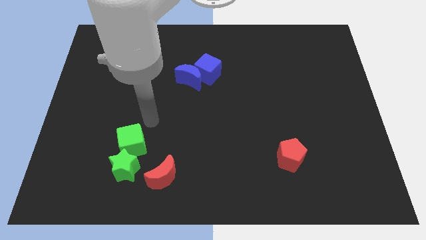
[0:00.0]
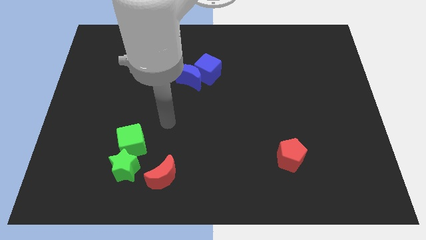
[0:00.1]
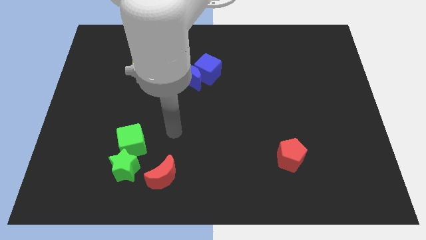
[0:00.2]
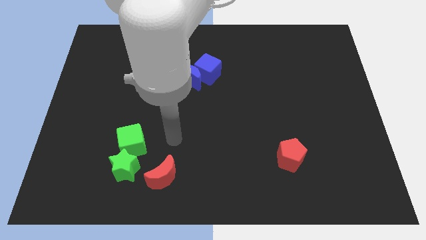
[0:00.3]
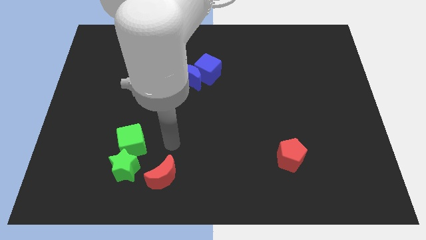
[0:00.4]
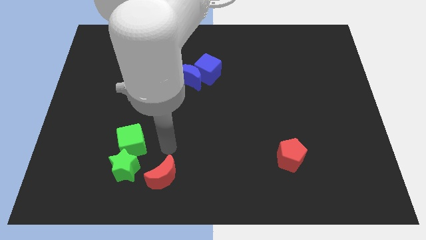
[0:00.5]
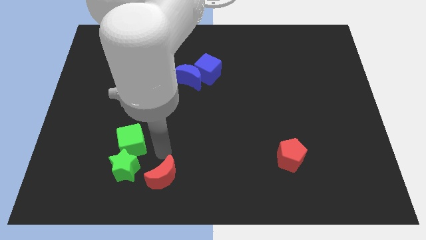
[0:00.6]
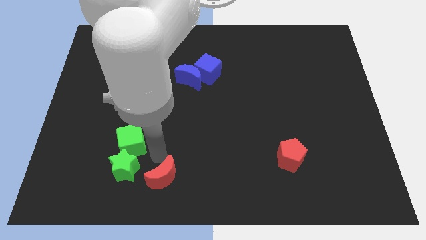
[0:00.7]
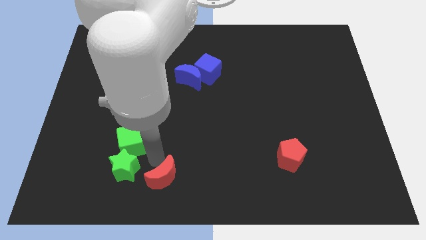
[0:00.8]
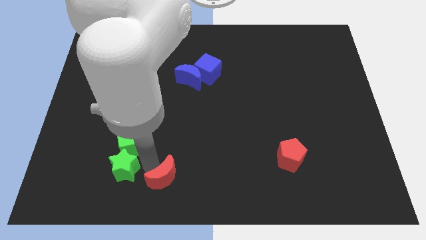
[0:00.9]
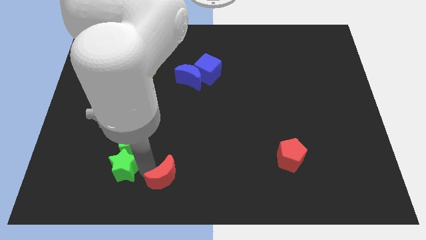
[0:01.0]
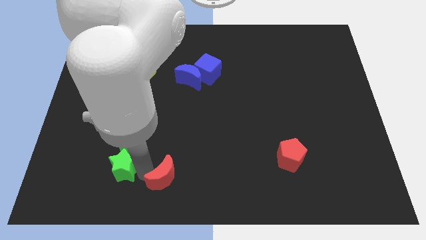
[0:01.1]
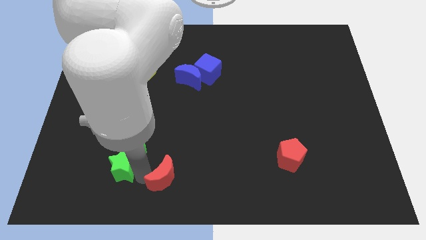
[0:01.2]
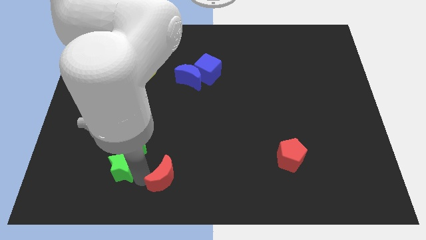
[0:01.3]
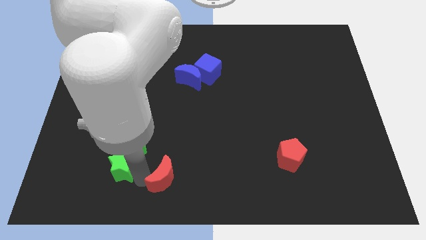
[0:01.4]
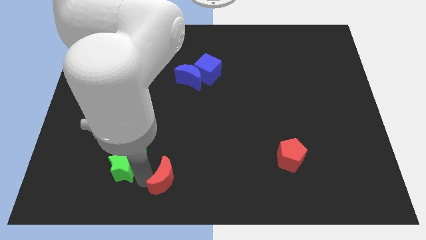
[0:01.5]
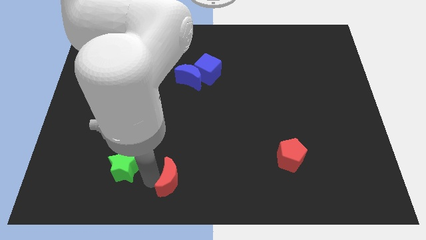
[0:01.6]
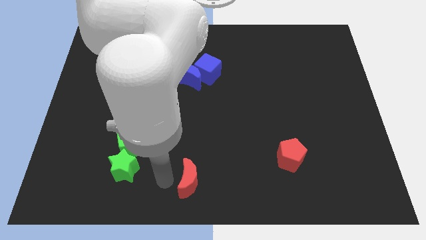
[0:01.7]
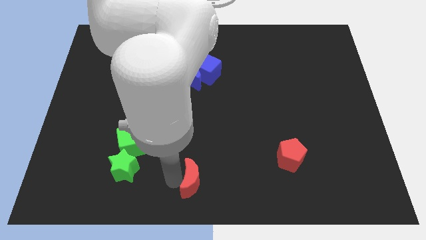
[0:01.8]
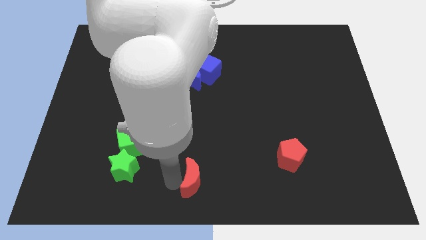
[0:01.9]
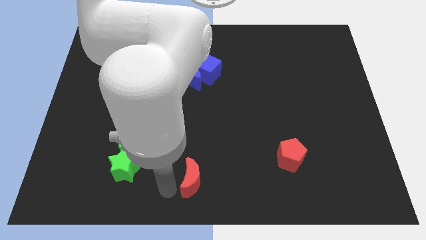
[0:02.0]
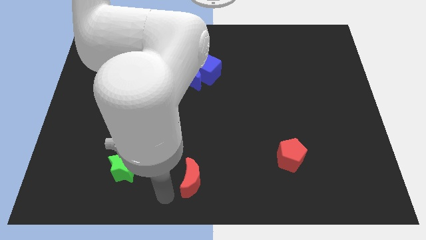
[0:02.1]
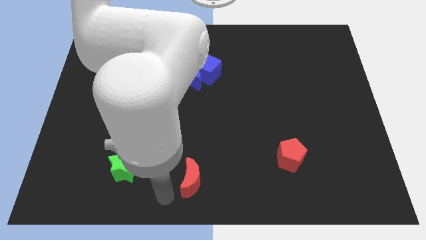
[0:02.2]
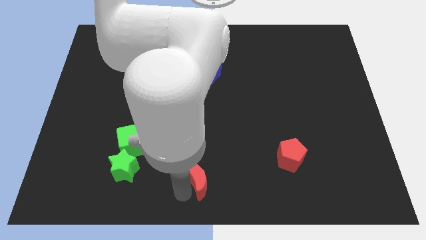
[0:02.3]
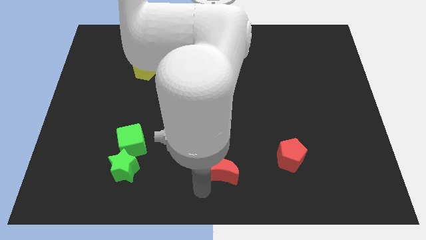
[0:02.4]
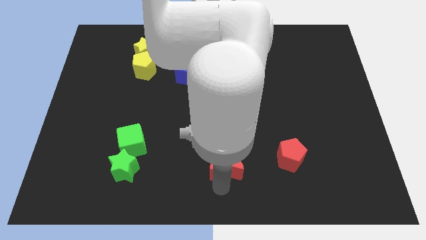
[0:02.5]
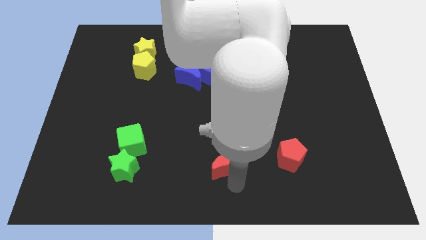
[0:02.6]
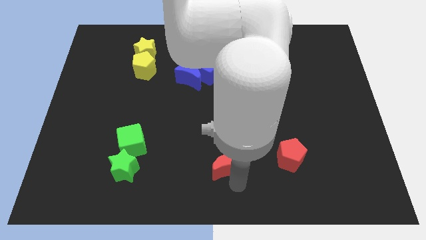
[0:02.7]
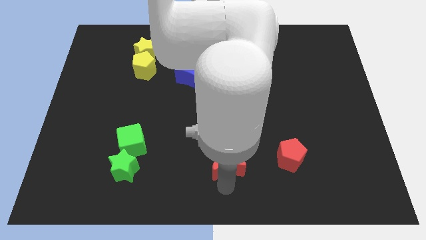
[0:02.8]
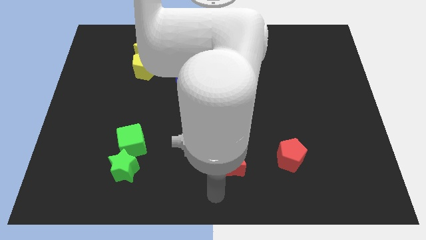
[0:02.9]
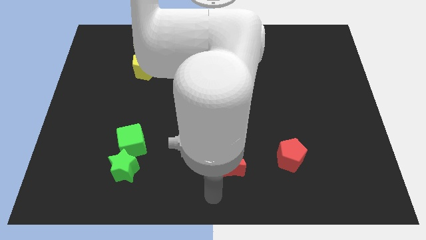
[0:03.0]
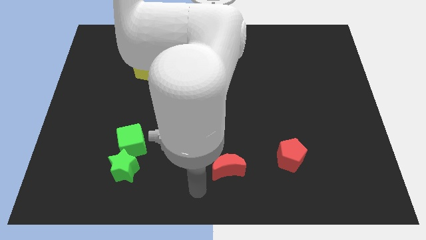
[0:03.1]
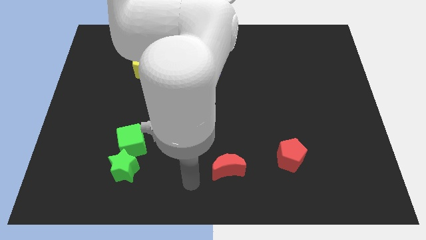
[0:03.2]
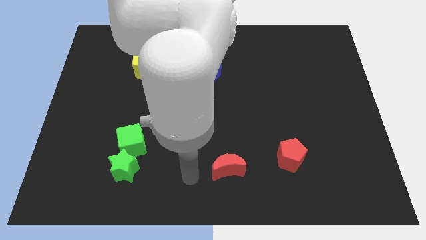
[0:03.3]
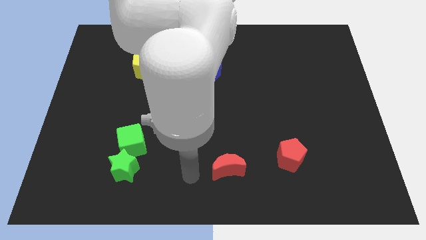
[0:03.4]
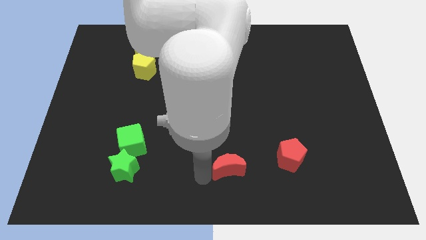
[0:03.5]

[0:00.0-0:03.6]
push the red crescent to the bottom center of the board

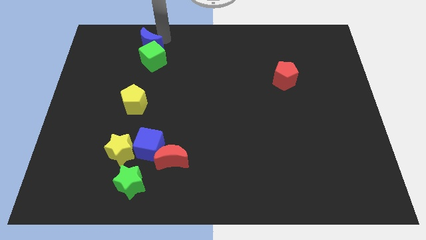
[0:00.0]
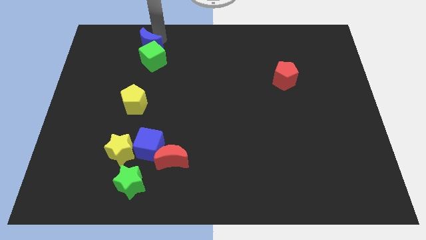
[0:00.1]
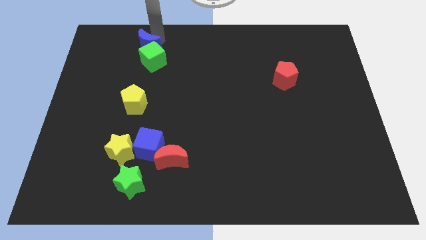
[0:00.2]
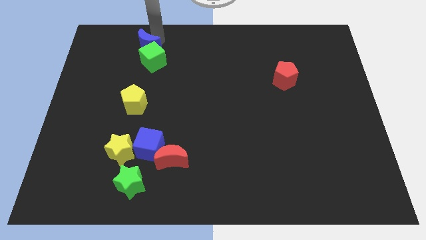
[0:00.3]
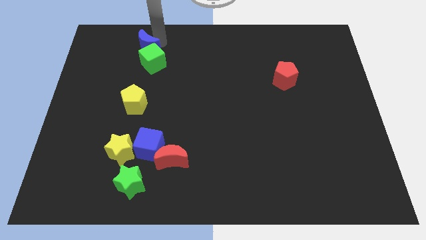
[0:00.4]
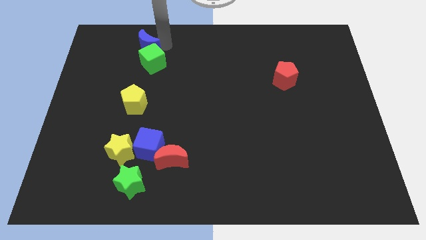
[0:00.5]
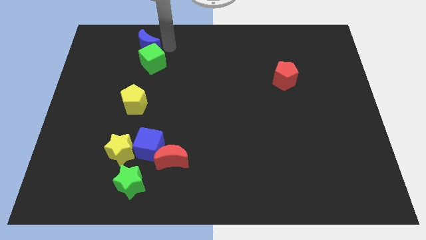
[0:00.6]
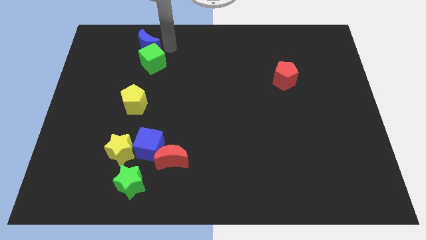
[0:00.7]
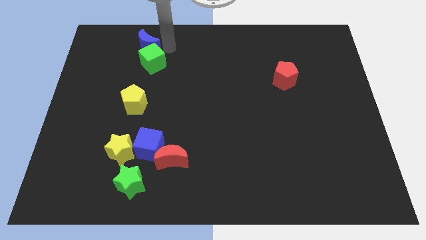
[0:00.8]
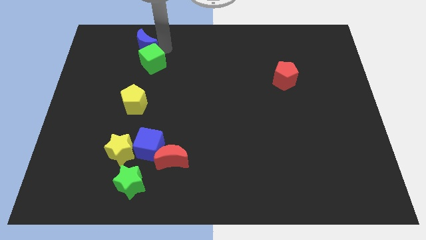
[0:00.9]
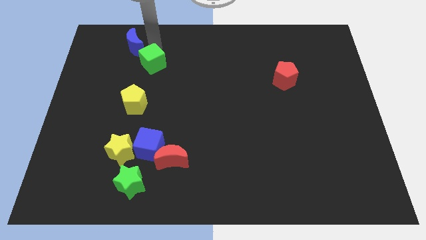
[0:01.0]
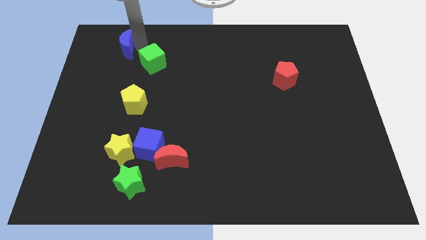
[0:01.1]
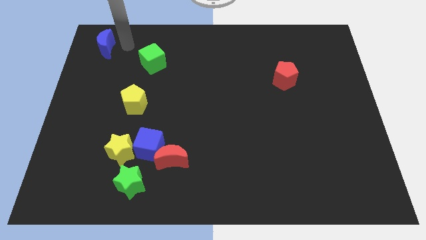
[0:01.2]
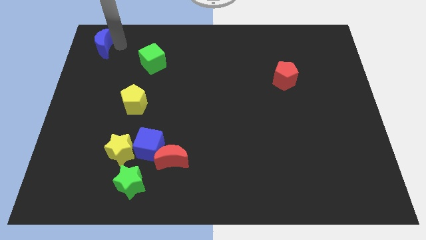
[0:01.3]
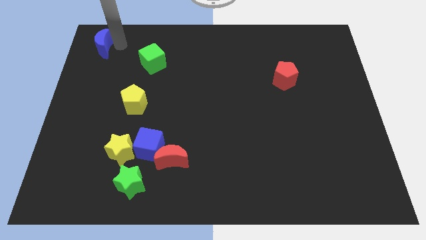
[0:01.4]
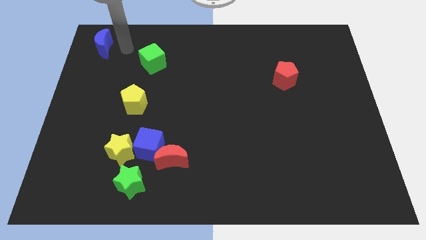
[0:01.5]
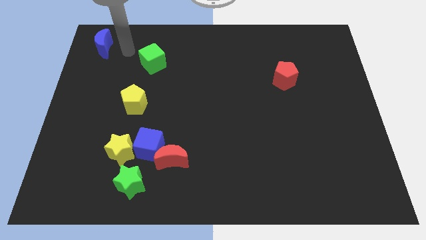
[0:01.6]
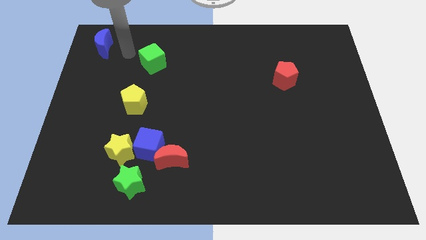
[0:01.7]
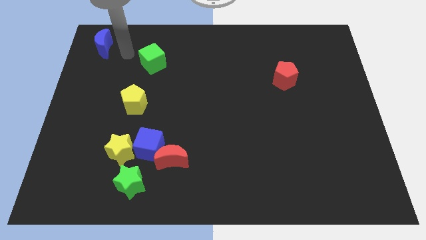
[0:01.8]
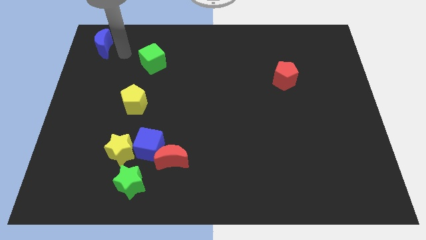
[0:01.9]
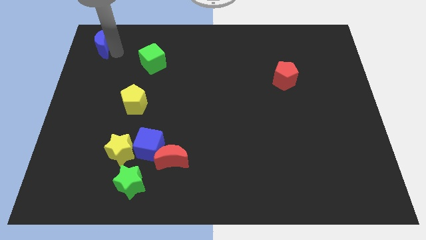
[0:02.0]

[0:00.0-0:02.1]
push the blue crescent towards the top left corner

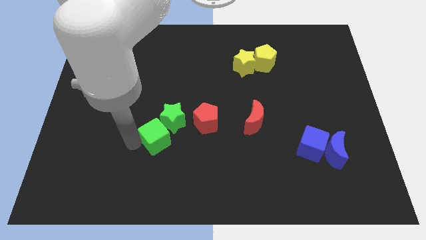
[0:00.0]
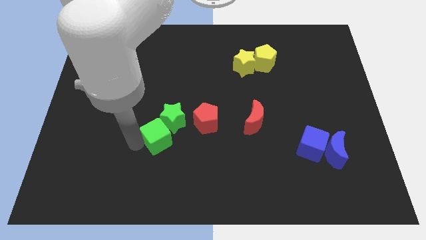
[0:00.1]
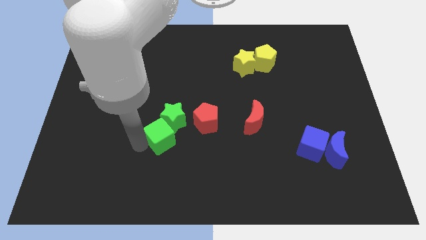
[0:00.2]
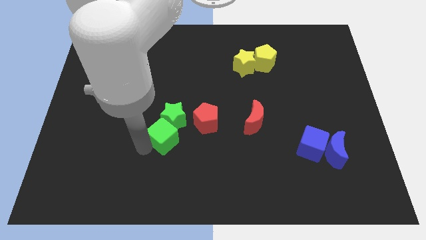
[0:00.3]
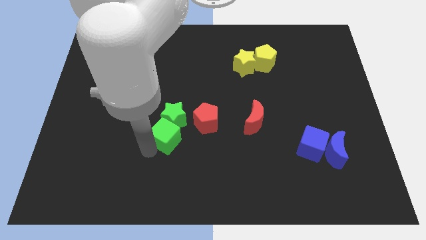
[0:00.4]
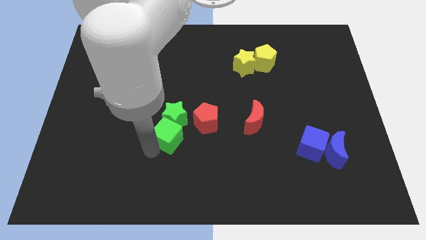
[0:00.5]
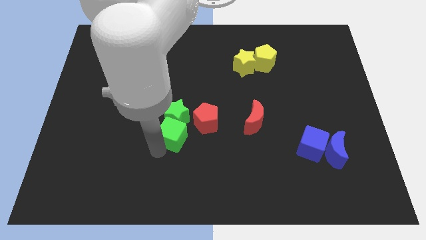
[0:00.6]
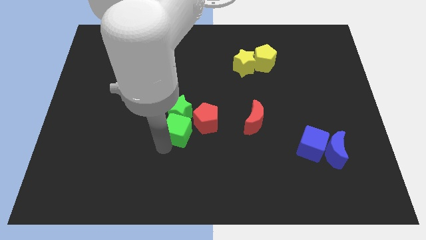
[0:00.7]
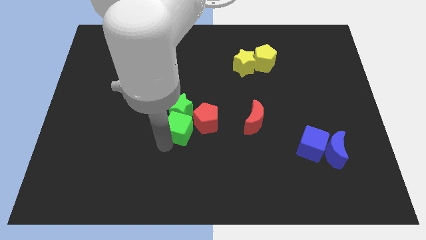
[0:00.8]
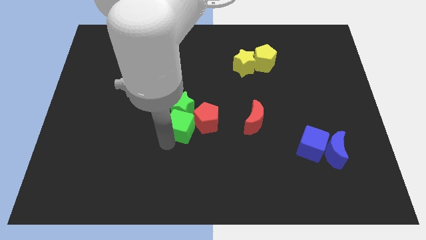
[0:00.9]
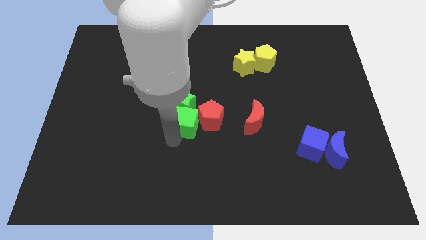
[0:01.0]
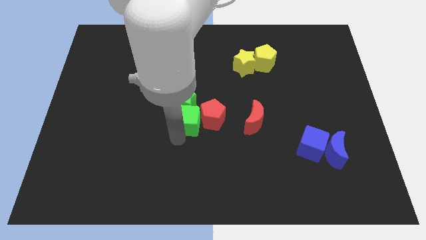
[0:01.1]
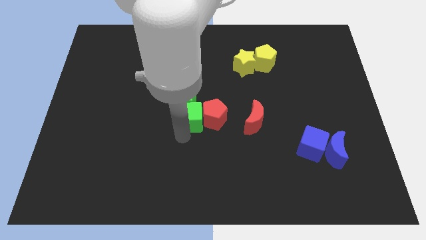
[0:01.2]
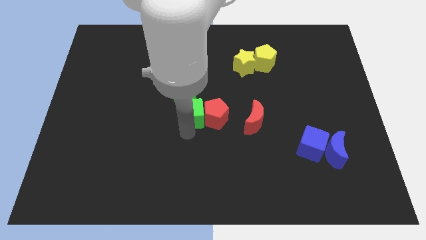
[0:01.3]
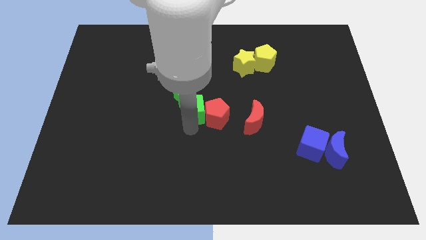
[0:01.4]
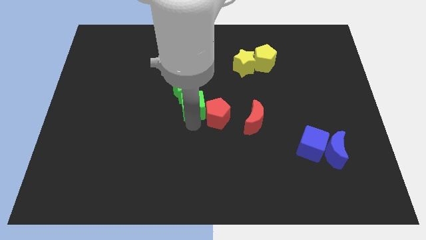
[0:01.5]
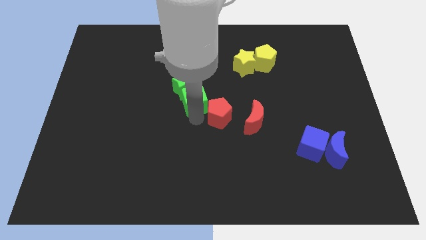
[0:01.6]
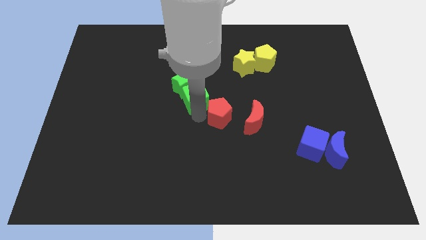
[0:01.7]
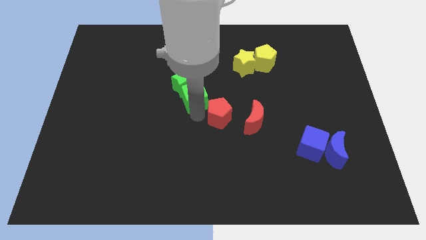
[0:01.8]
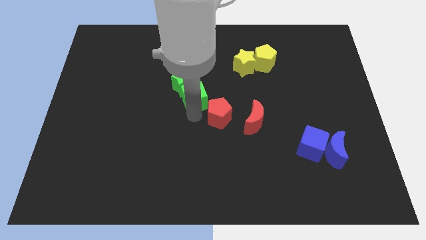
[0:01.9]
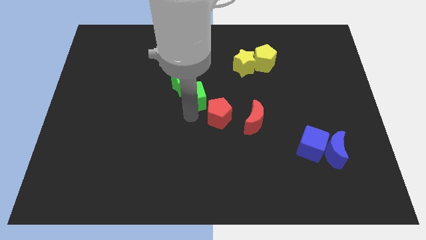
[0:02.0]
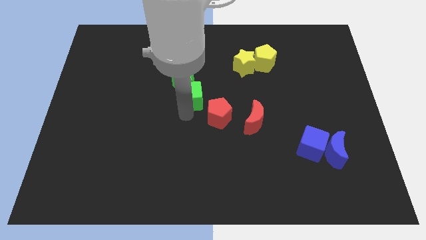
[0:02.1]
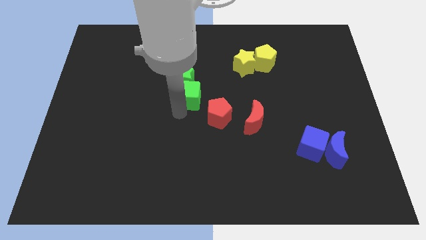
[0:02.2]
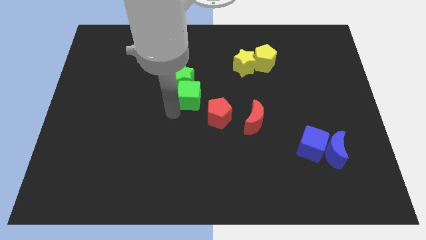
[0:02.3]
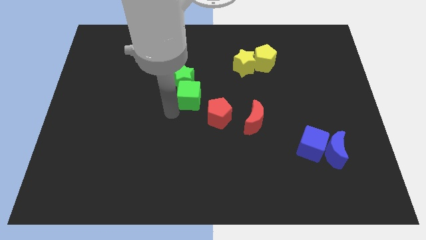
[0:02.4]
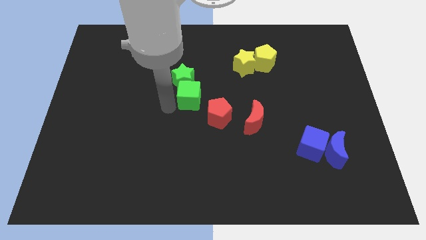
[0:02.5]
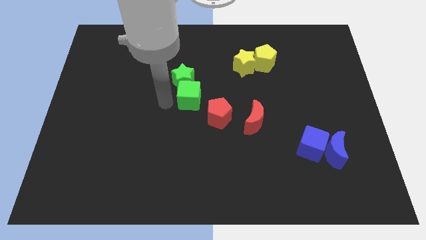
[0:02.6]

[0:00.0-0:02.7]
push green cube and green star to the top center

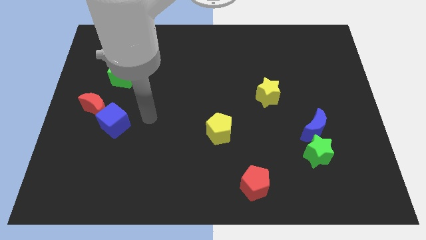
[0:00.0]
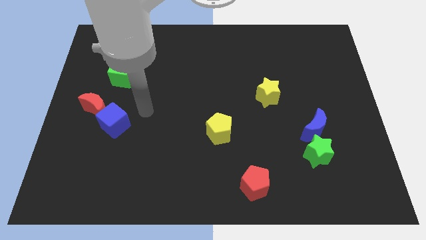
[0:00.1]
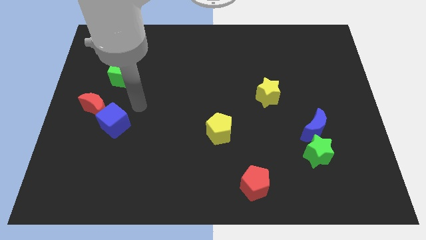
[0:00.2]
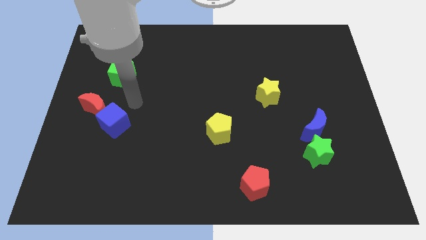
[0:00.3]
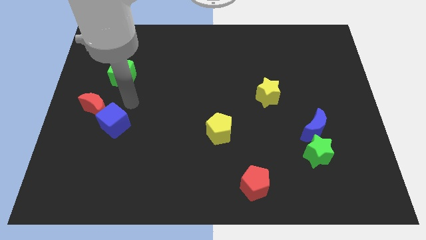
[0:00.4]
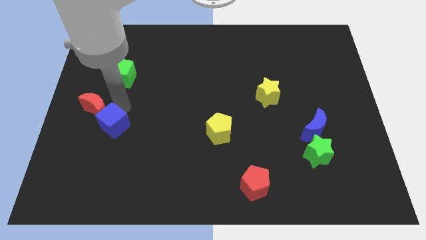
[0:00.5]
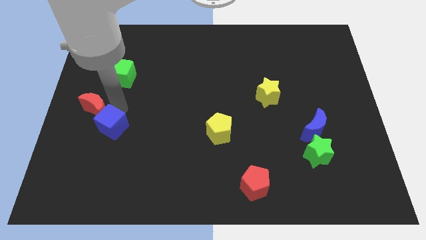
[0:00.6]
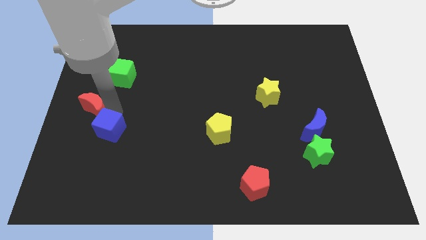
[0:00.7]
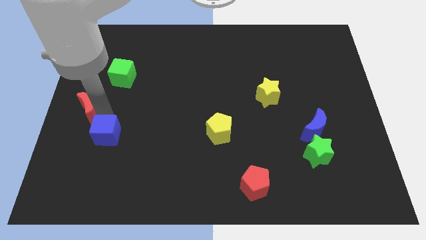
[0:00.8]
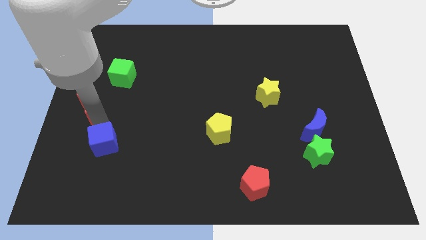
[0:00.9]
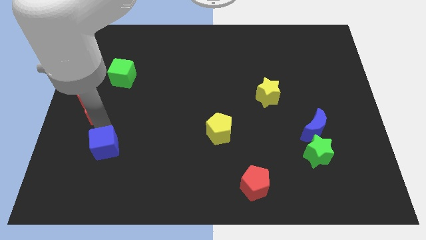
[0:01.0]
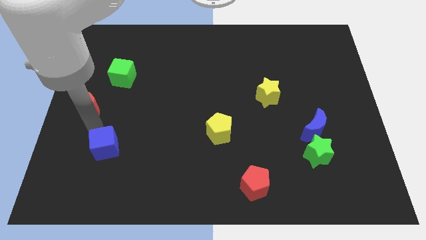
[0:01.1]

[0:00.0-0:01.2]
place the blue cube below the red moon
